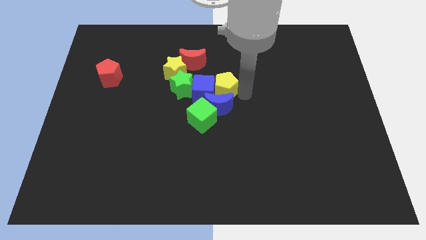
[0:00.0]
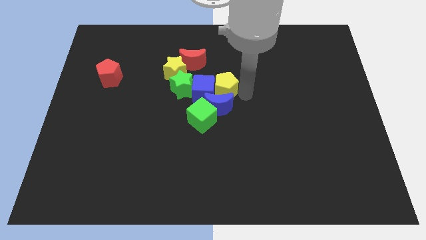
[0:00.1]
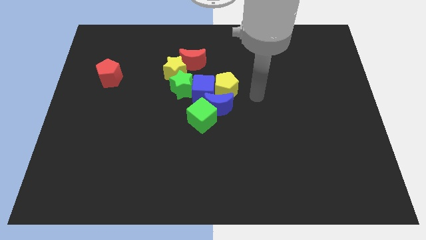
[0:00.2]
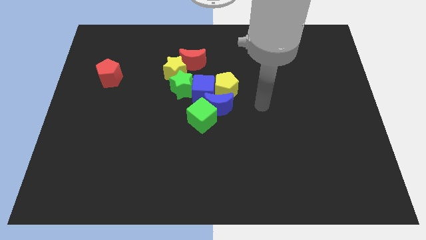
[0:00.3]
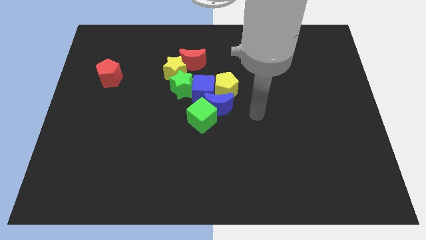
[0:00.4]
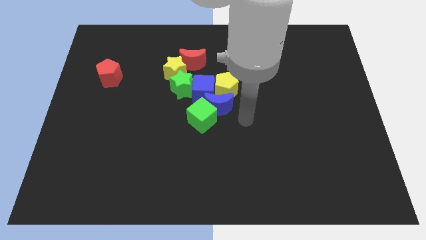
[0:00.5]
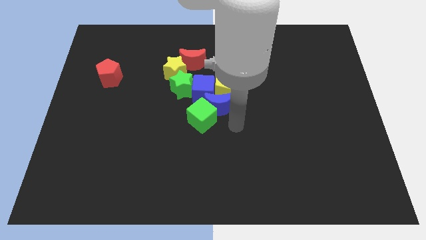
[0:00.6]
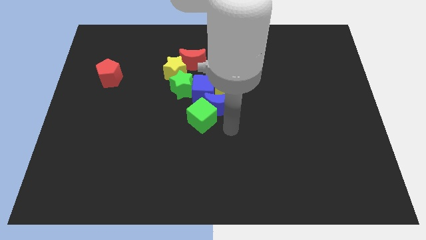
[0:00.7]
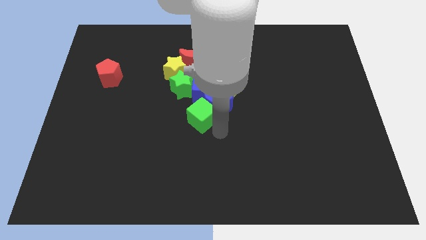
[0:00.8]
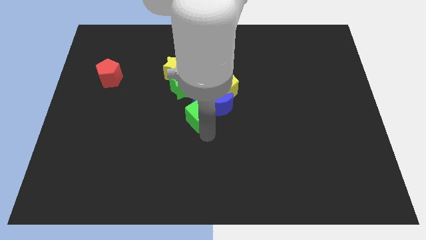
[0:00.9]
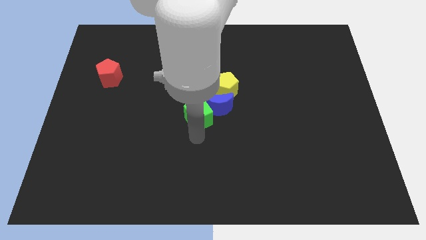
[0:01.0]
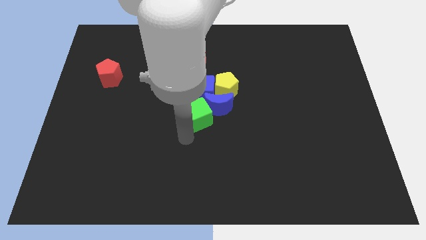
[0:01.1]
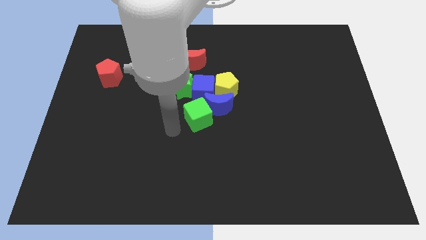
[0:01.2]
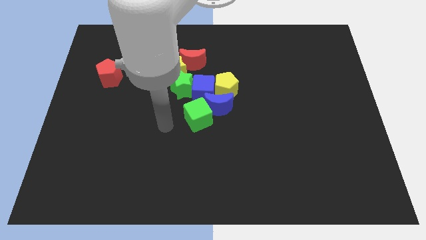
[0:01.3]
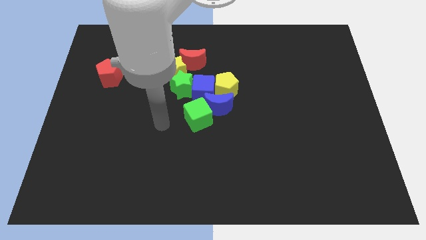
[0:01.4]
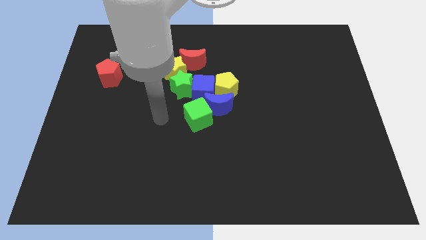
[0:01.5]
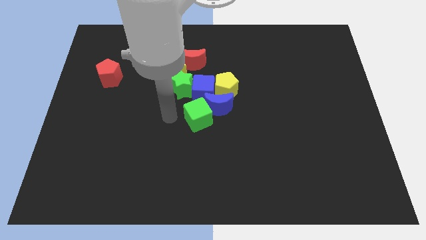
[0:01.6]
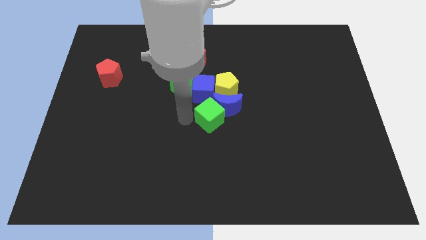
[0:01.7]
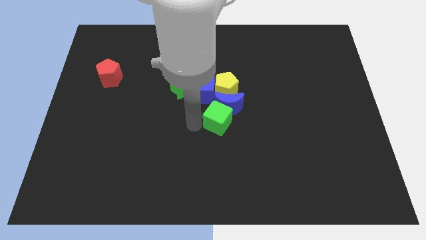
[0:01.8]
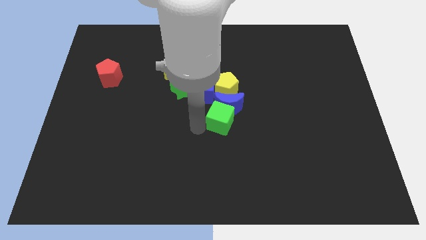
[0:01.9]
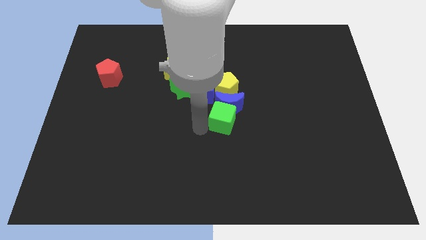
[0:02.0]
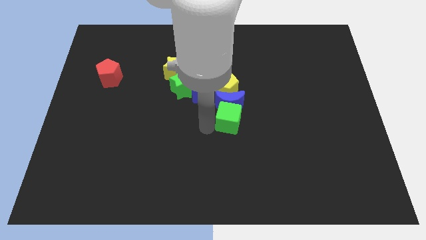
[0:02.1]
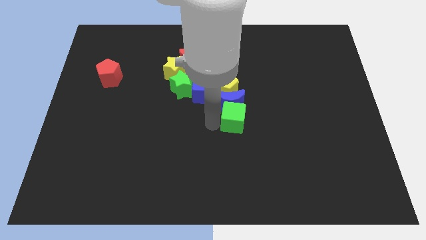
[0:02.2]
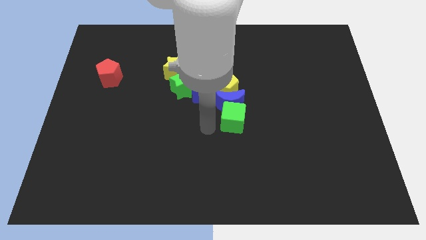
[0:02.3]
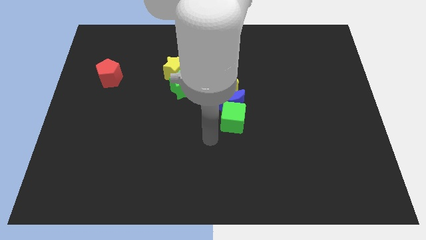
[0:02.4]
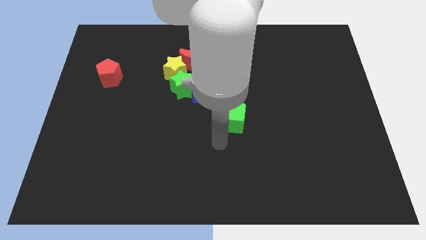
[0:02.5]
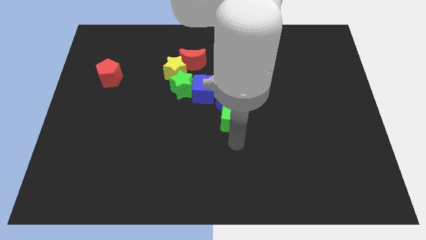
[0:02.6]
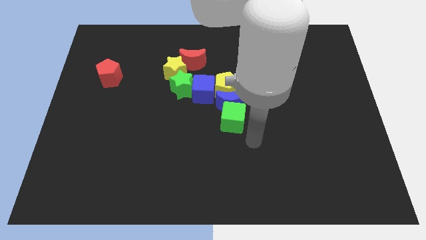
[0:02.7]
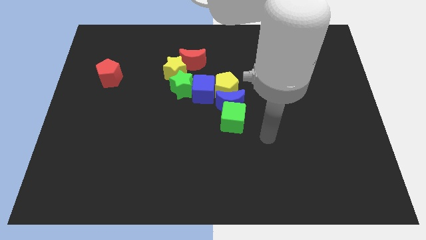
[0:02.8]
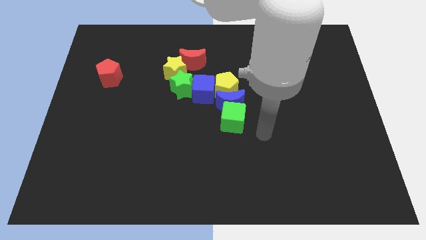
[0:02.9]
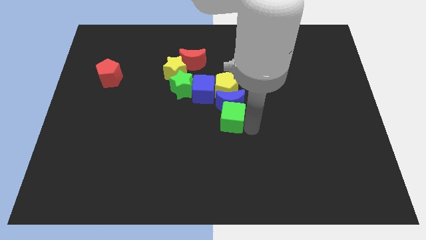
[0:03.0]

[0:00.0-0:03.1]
push the green cube to the bottom of the blue crescent

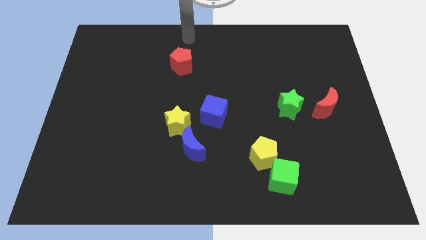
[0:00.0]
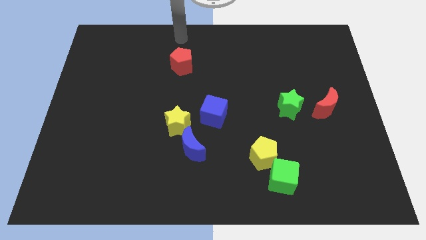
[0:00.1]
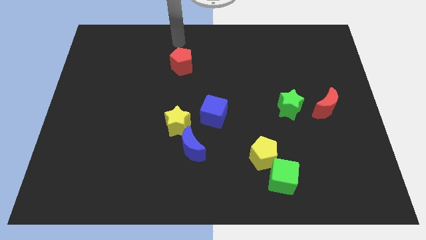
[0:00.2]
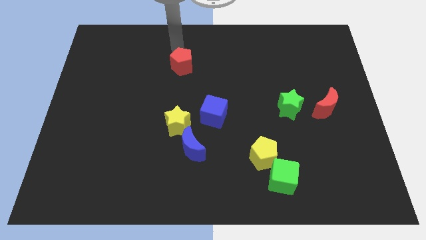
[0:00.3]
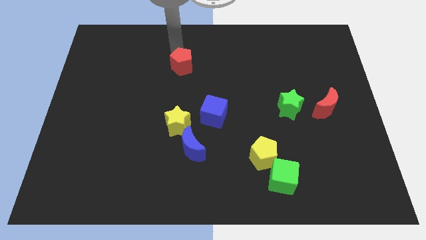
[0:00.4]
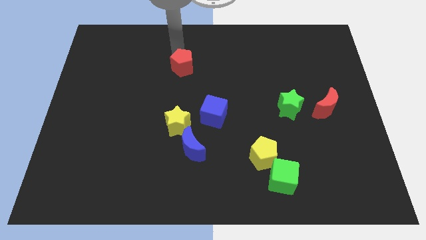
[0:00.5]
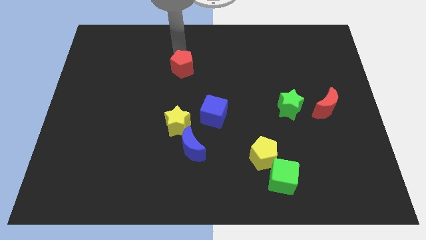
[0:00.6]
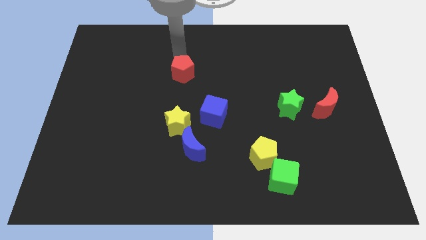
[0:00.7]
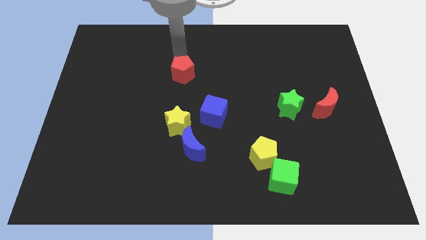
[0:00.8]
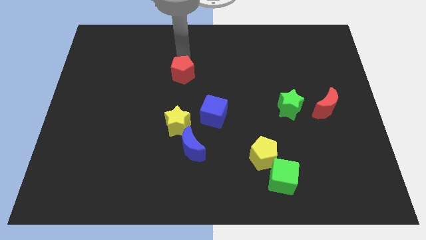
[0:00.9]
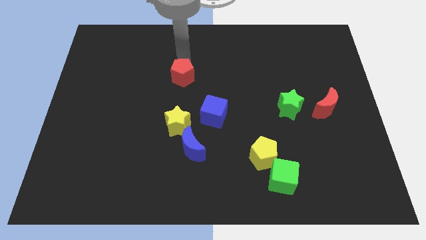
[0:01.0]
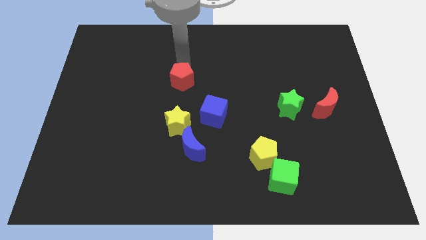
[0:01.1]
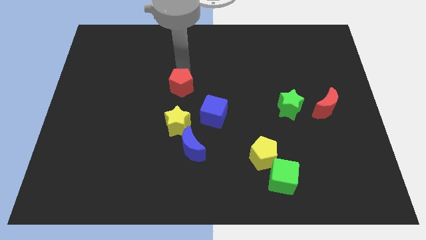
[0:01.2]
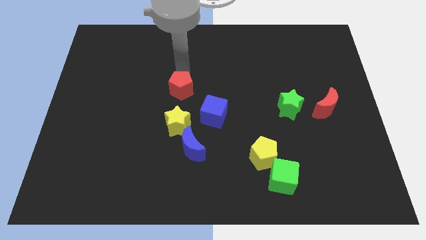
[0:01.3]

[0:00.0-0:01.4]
slightly push the red pentagon towards down

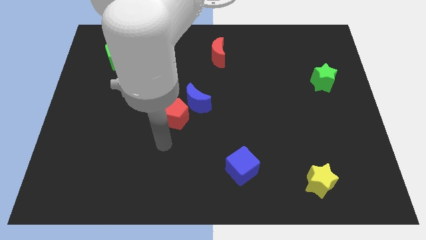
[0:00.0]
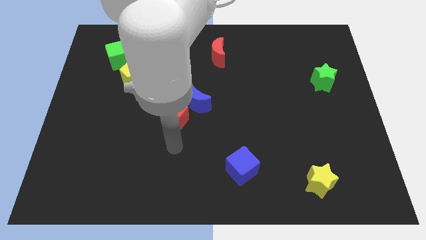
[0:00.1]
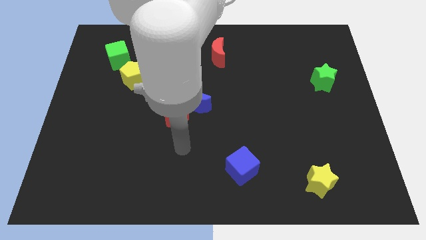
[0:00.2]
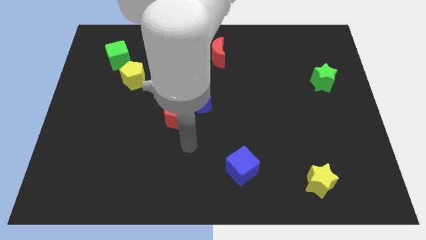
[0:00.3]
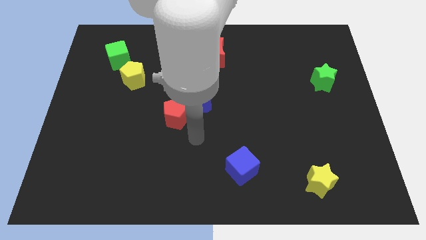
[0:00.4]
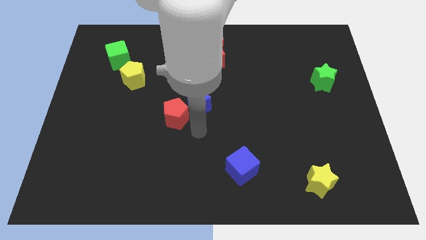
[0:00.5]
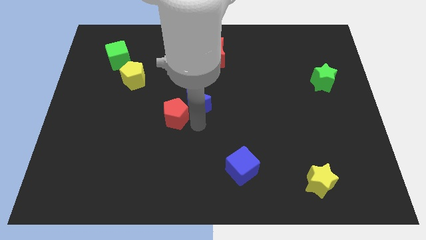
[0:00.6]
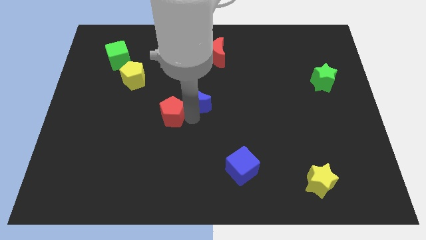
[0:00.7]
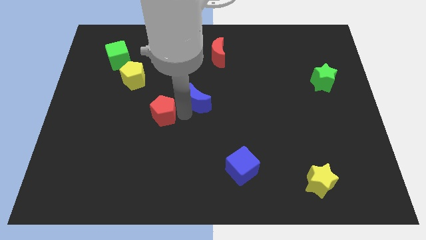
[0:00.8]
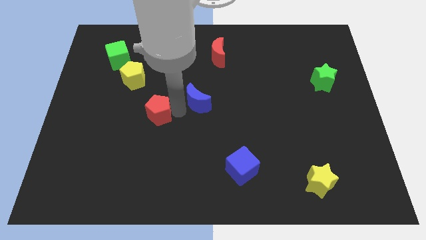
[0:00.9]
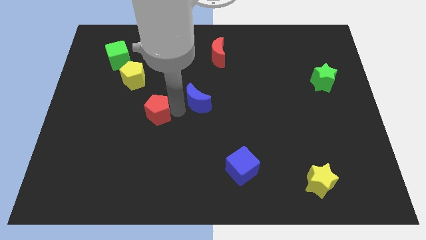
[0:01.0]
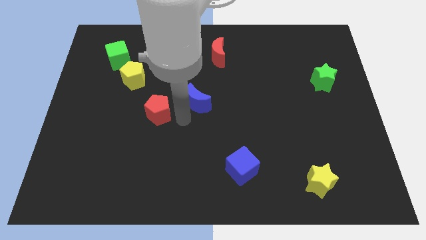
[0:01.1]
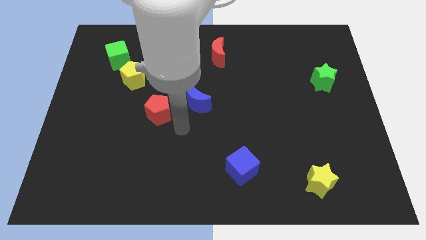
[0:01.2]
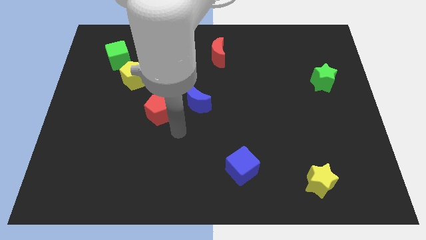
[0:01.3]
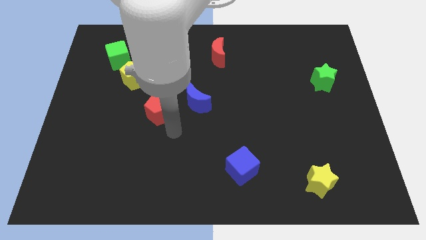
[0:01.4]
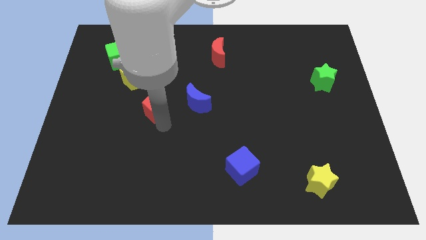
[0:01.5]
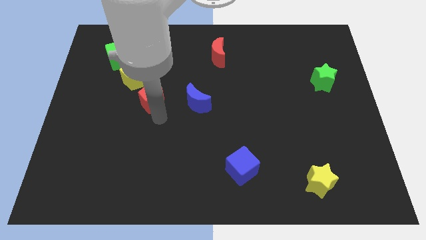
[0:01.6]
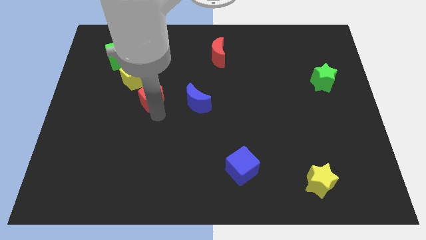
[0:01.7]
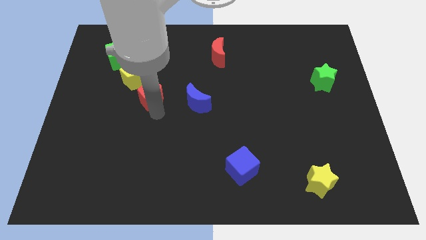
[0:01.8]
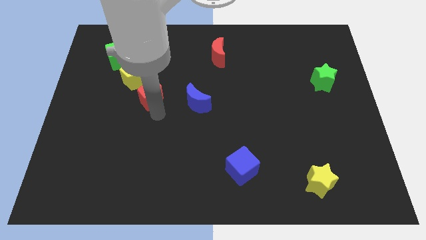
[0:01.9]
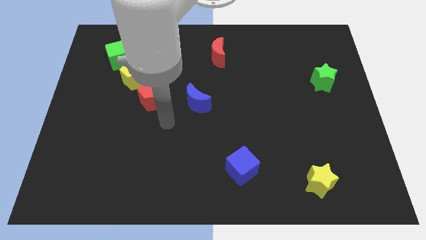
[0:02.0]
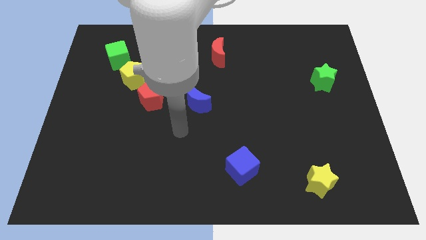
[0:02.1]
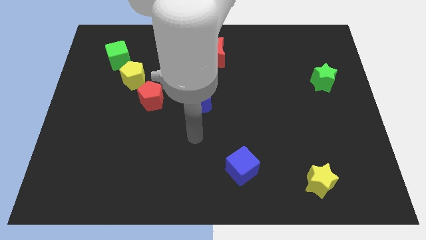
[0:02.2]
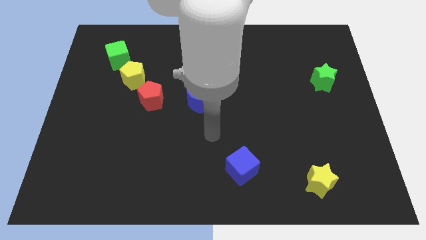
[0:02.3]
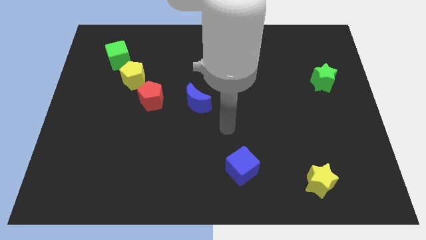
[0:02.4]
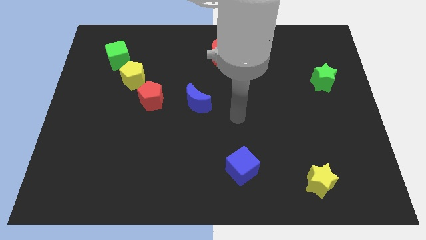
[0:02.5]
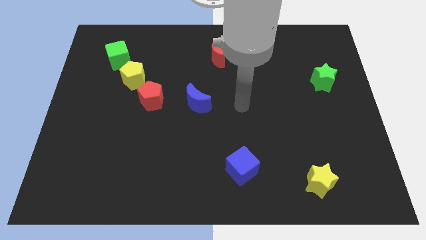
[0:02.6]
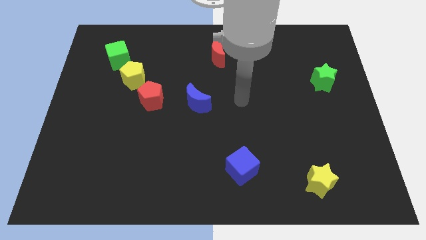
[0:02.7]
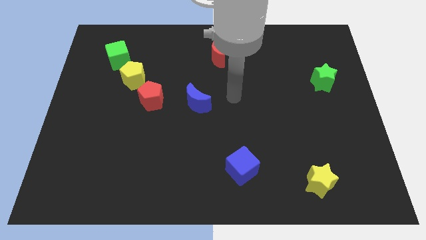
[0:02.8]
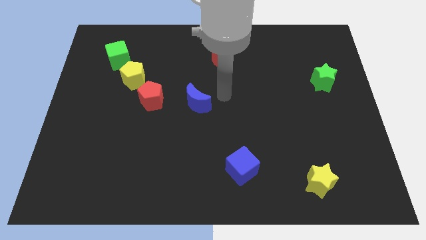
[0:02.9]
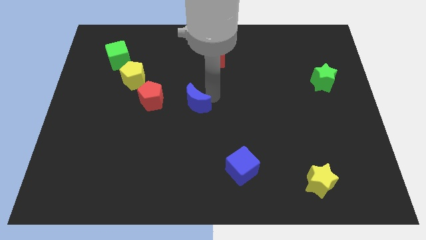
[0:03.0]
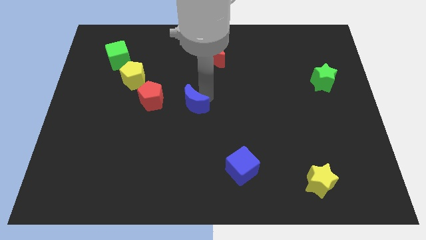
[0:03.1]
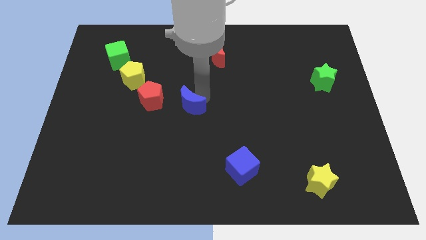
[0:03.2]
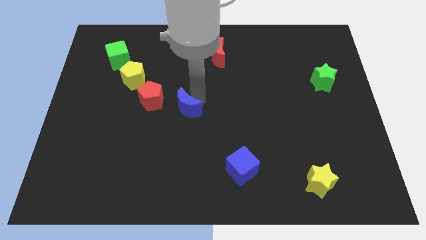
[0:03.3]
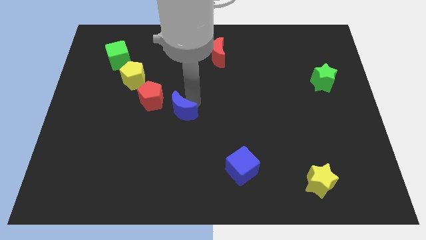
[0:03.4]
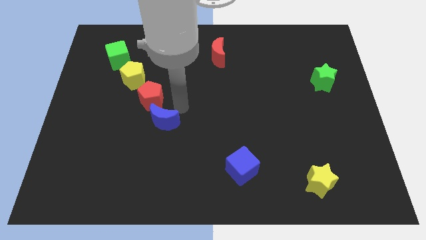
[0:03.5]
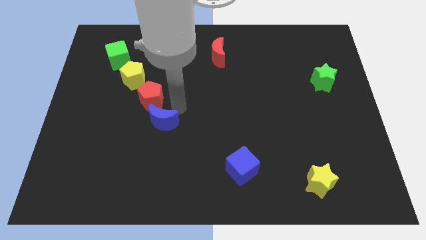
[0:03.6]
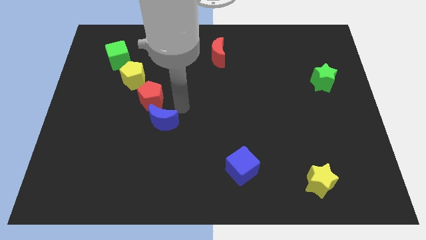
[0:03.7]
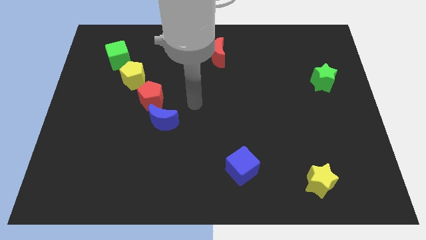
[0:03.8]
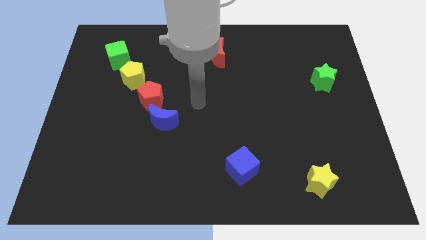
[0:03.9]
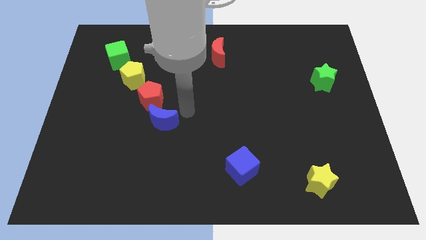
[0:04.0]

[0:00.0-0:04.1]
put the blue crescent below the red pentagon

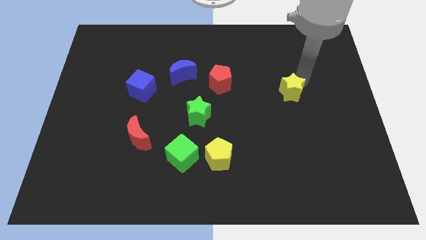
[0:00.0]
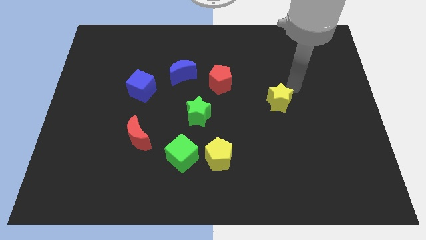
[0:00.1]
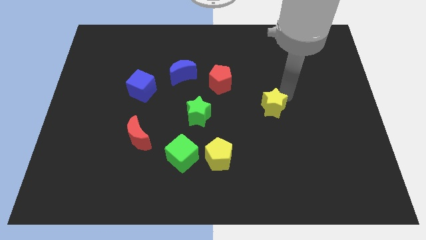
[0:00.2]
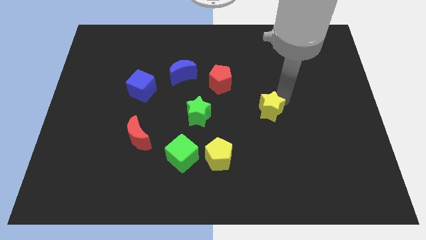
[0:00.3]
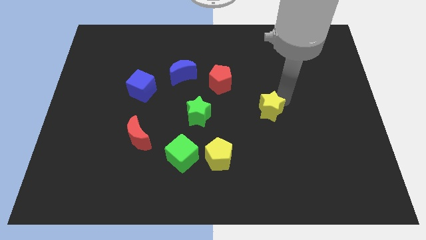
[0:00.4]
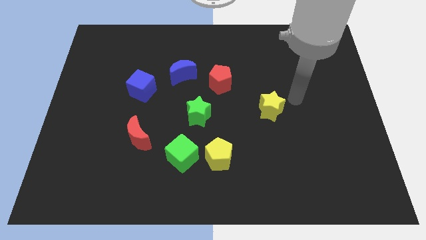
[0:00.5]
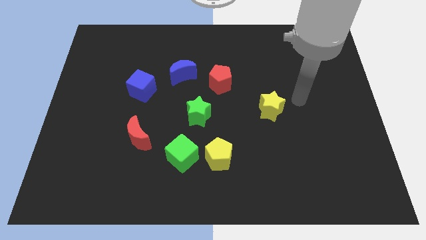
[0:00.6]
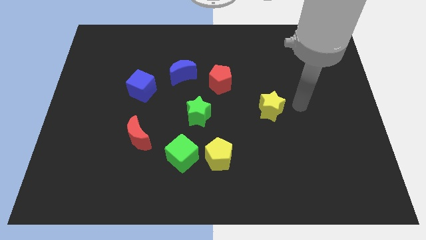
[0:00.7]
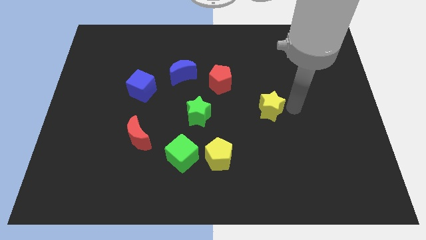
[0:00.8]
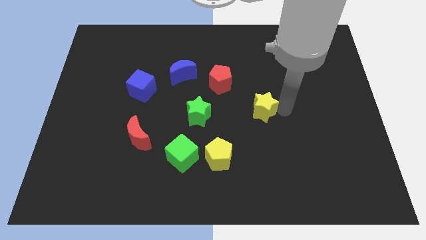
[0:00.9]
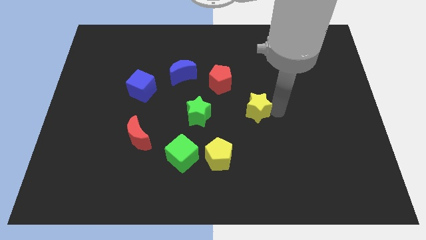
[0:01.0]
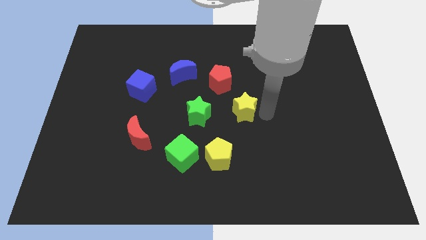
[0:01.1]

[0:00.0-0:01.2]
place the yellow star right to the green star
